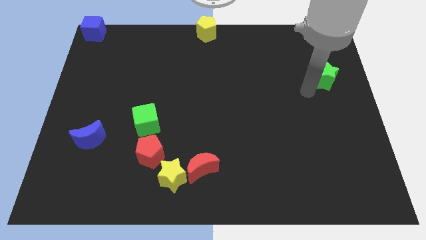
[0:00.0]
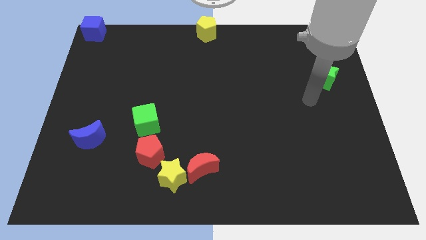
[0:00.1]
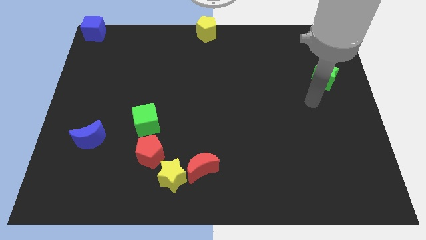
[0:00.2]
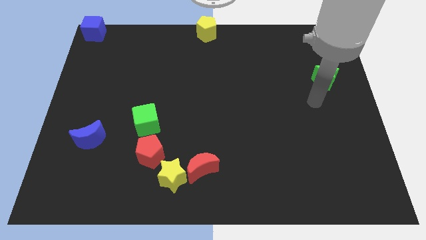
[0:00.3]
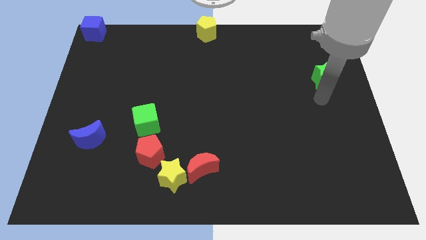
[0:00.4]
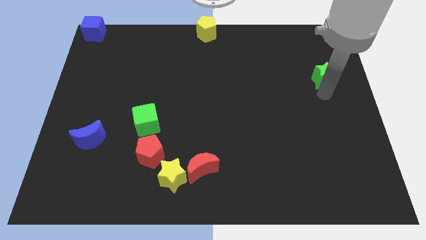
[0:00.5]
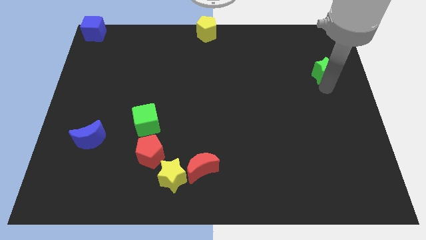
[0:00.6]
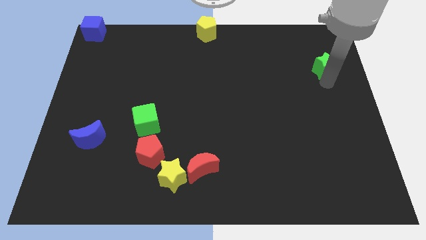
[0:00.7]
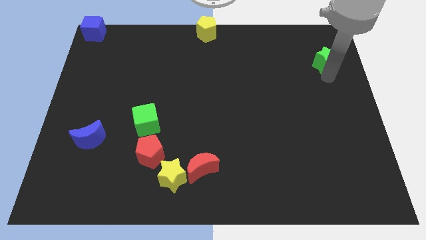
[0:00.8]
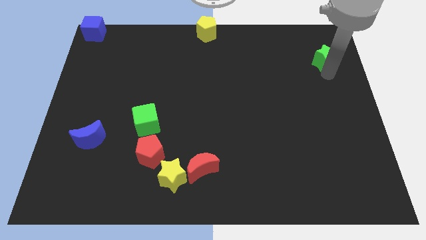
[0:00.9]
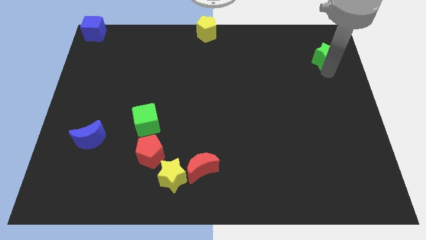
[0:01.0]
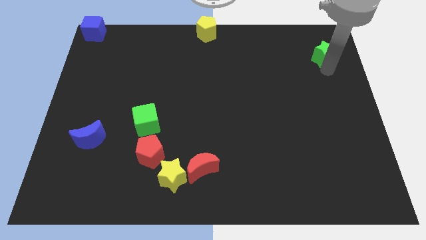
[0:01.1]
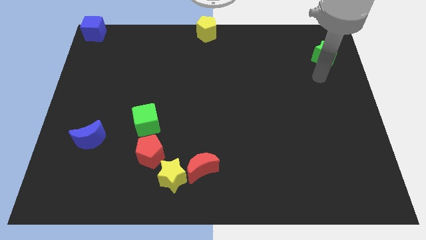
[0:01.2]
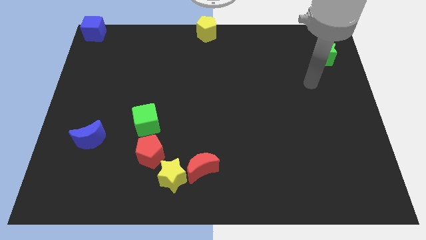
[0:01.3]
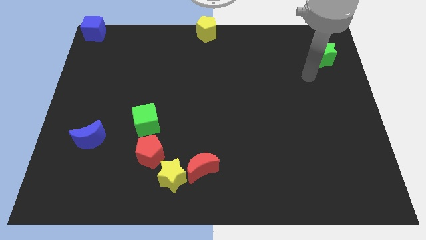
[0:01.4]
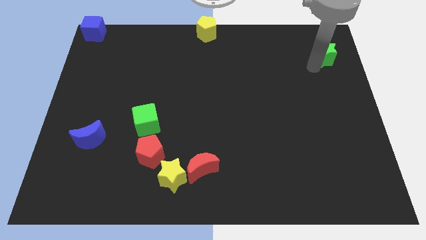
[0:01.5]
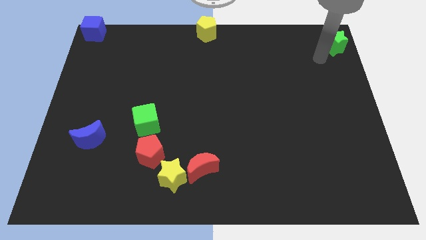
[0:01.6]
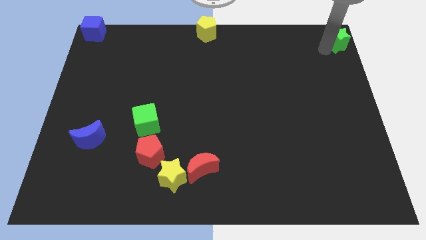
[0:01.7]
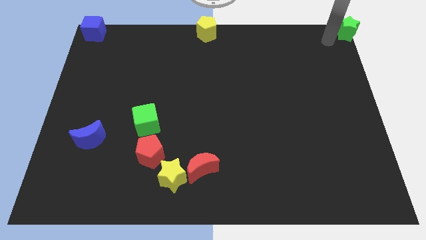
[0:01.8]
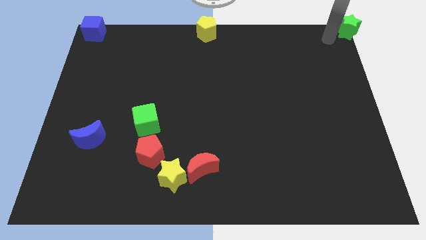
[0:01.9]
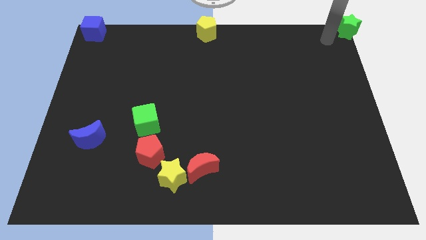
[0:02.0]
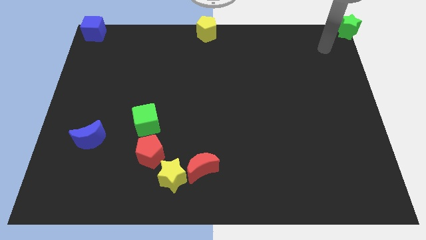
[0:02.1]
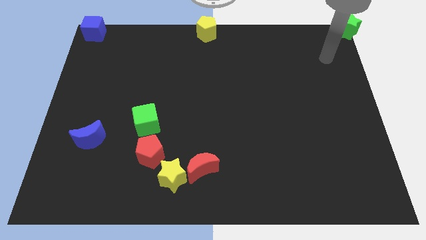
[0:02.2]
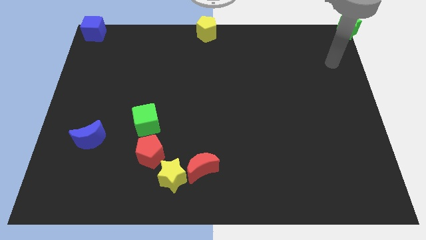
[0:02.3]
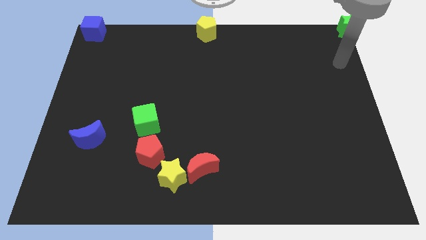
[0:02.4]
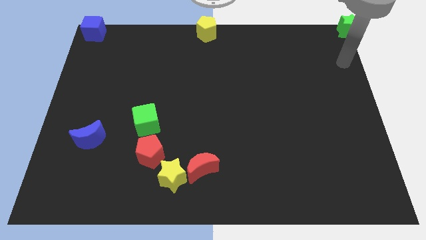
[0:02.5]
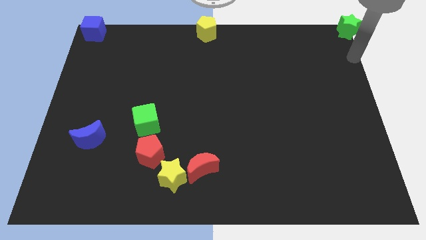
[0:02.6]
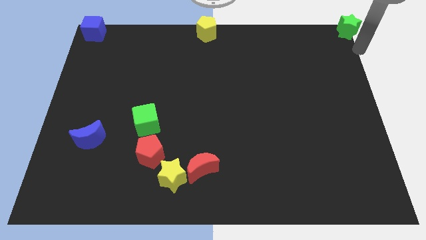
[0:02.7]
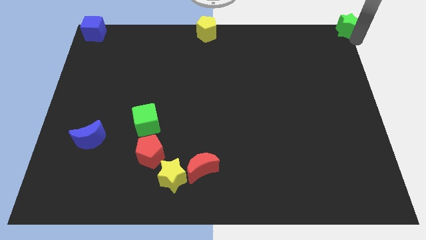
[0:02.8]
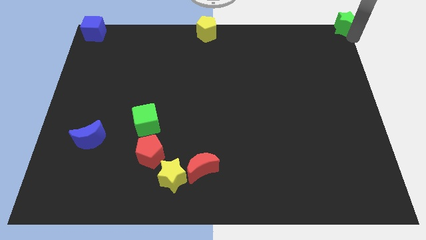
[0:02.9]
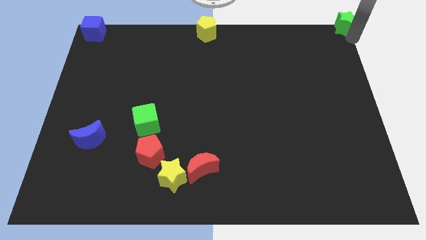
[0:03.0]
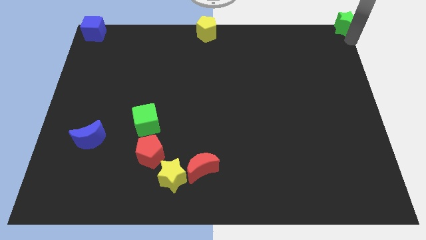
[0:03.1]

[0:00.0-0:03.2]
put the green star at the top right corner of the table

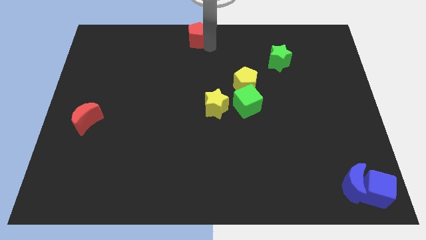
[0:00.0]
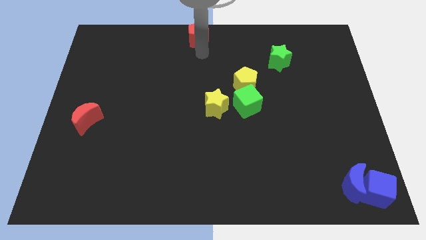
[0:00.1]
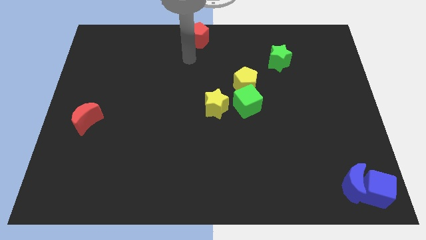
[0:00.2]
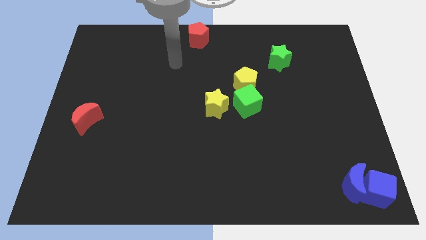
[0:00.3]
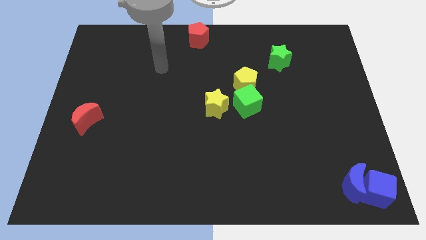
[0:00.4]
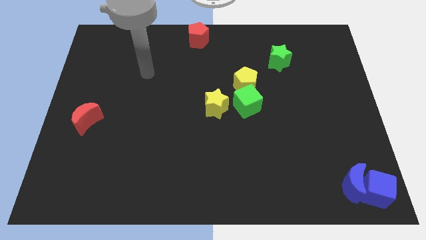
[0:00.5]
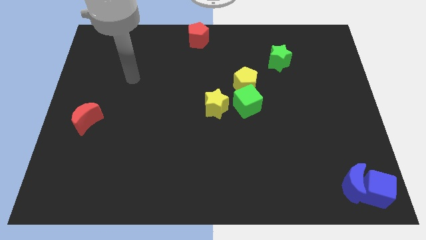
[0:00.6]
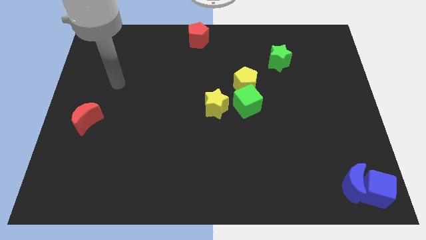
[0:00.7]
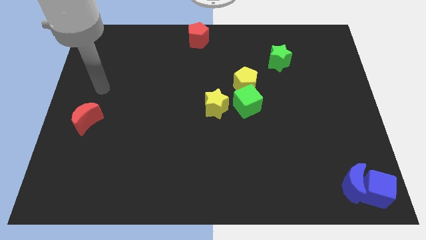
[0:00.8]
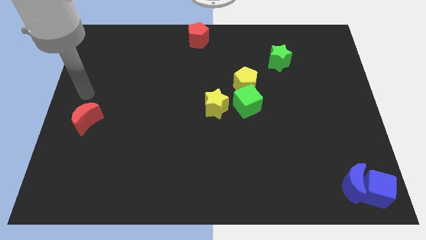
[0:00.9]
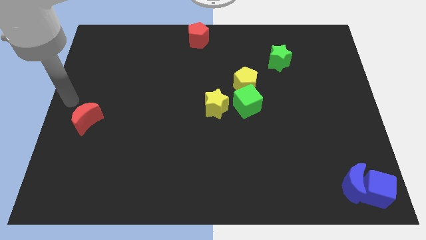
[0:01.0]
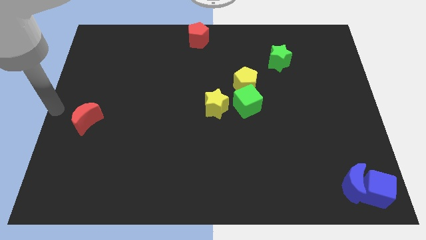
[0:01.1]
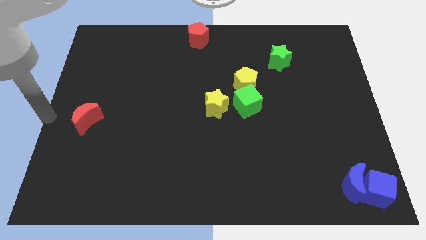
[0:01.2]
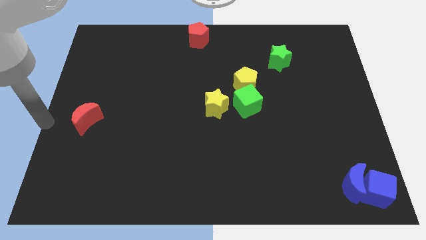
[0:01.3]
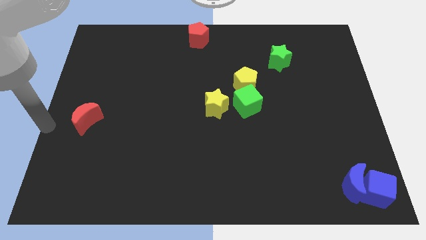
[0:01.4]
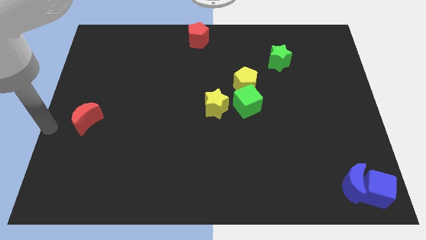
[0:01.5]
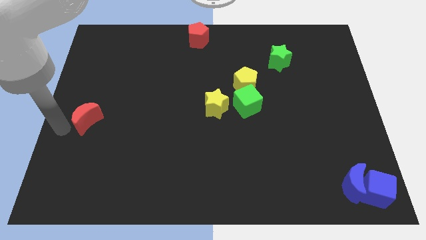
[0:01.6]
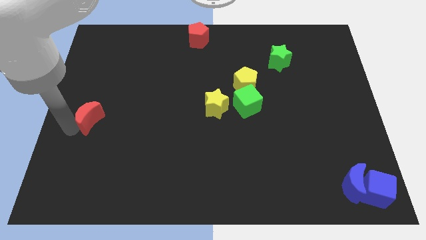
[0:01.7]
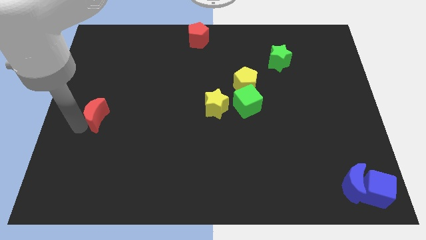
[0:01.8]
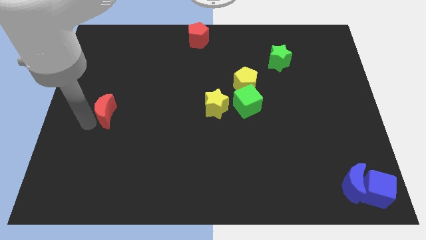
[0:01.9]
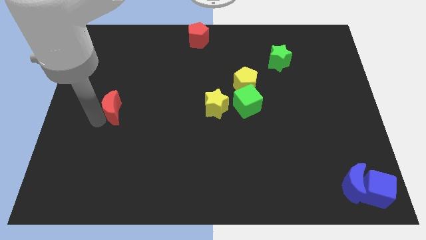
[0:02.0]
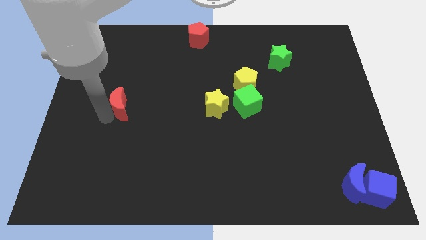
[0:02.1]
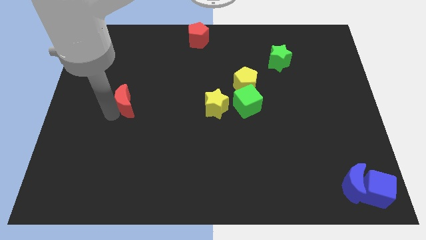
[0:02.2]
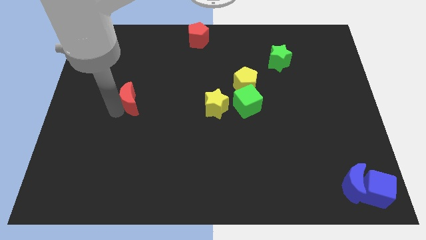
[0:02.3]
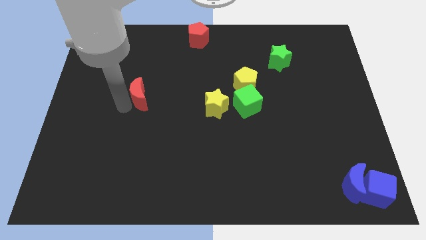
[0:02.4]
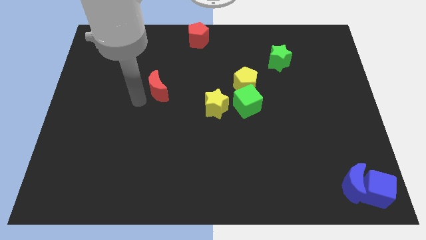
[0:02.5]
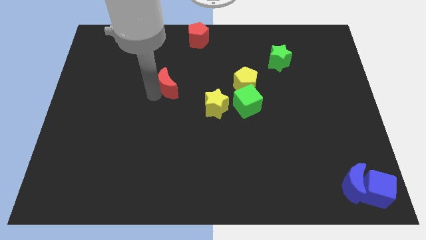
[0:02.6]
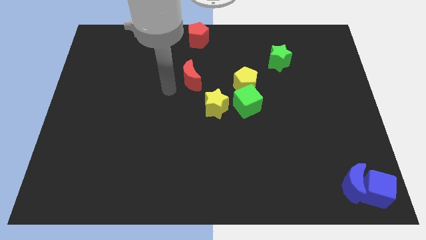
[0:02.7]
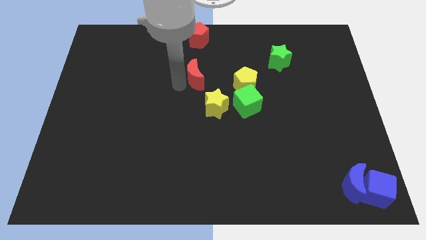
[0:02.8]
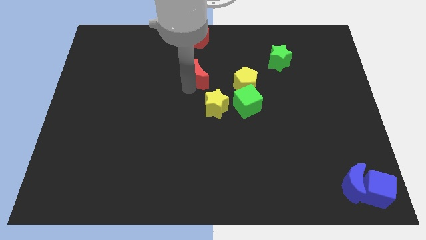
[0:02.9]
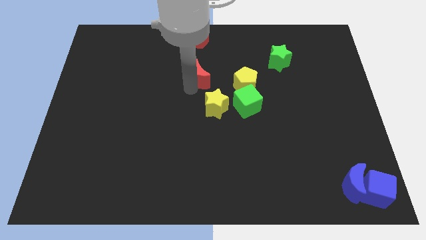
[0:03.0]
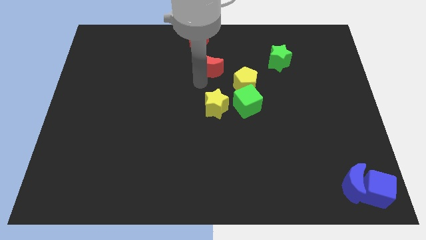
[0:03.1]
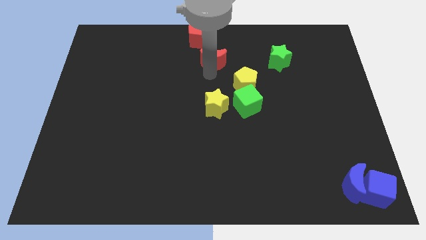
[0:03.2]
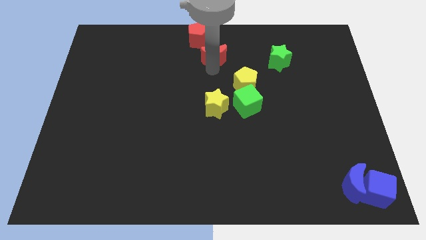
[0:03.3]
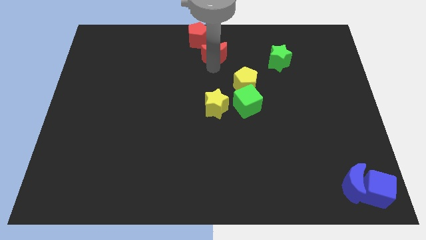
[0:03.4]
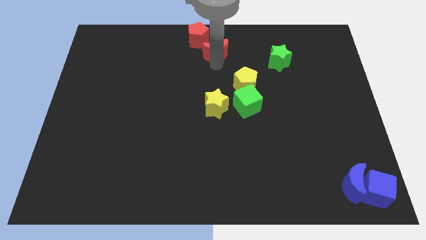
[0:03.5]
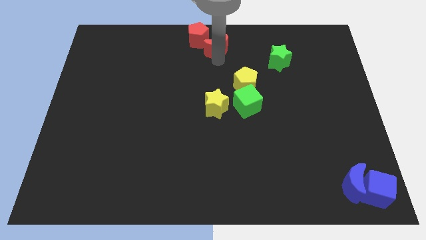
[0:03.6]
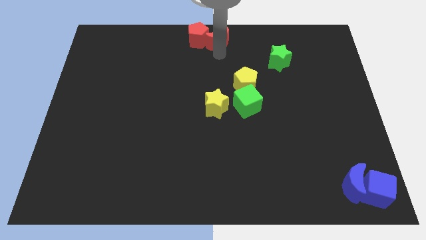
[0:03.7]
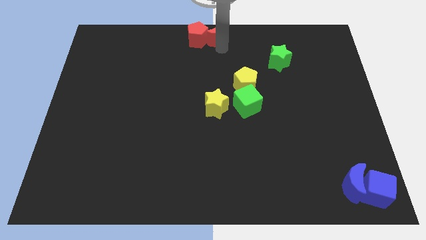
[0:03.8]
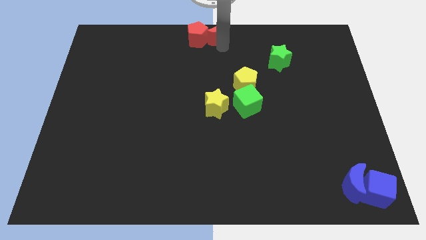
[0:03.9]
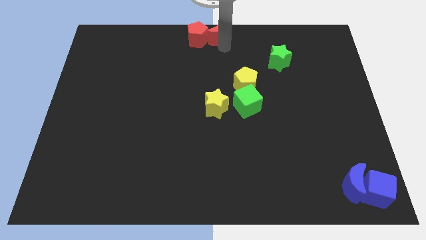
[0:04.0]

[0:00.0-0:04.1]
slide the red crescent into the right side of the red pentagon

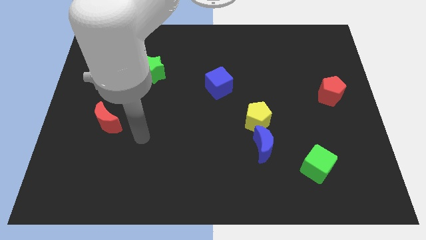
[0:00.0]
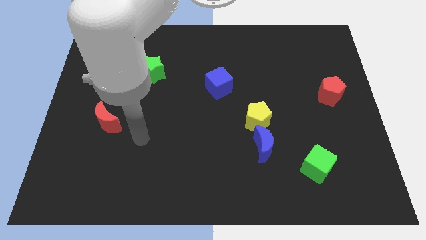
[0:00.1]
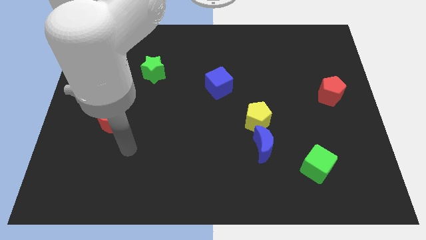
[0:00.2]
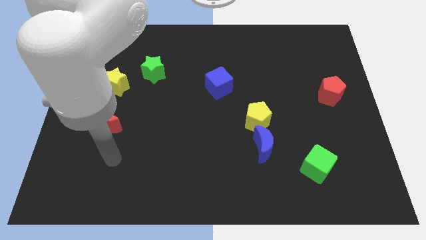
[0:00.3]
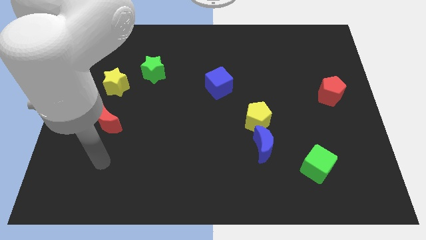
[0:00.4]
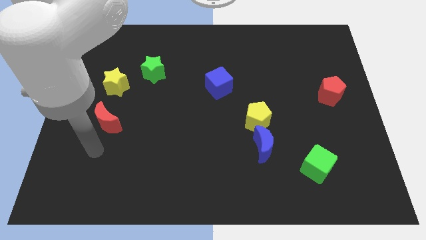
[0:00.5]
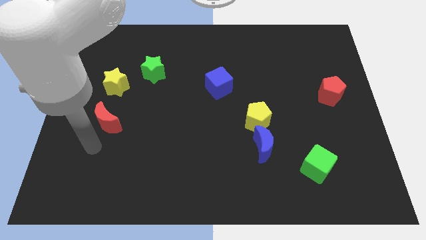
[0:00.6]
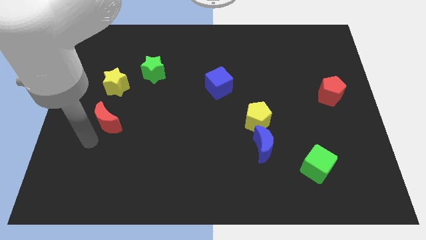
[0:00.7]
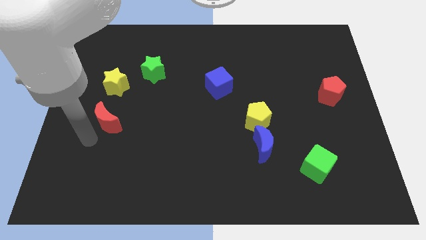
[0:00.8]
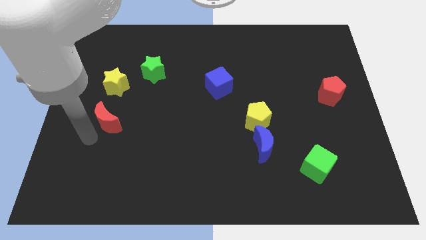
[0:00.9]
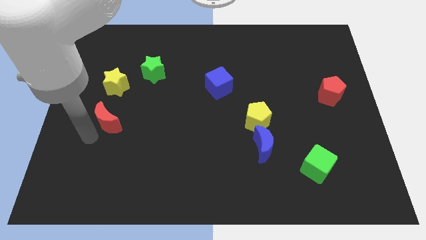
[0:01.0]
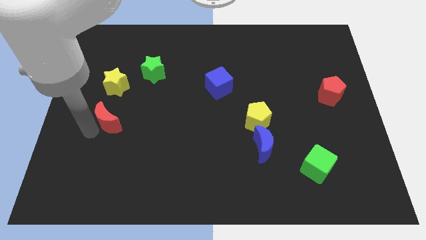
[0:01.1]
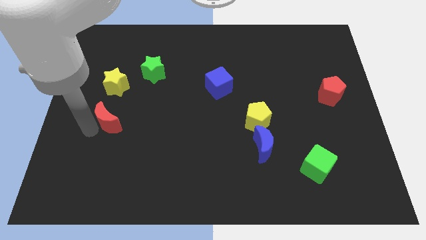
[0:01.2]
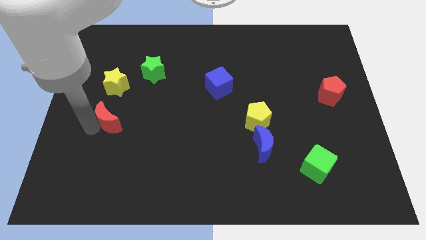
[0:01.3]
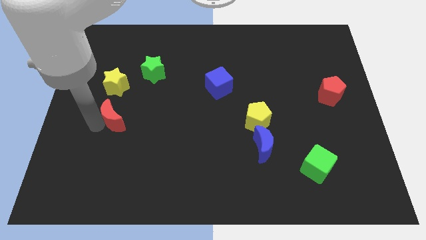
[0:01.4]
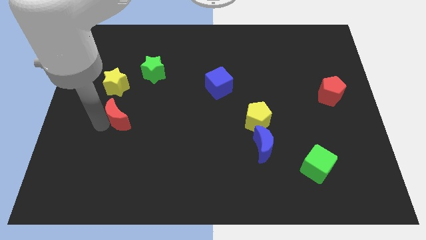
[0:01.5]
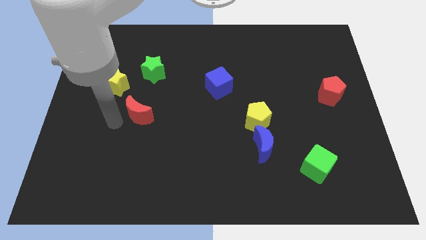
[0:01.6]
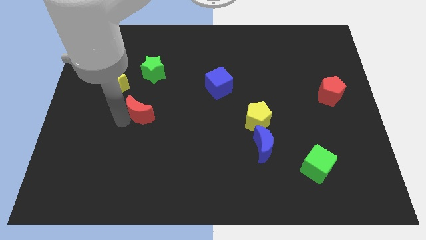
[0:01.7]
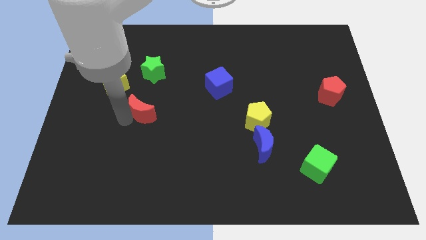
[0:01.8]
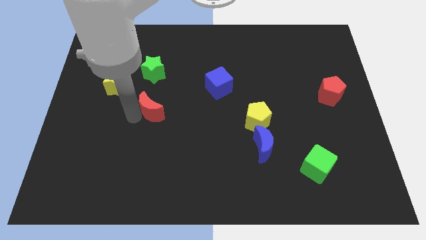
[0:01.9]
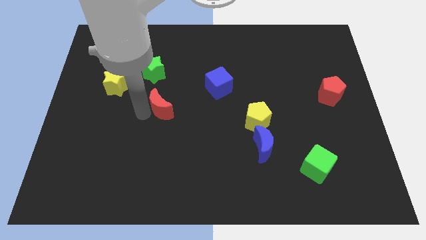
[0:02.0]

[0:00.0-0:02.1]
push the red crescent to the right of the board
